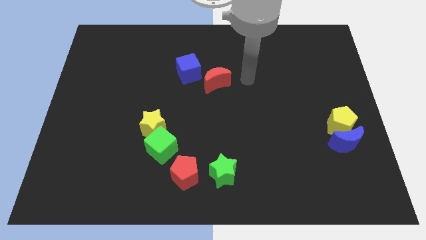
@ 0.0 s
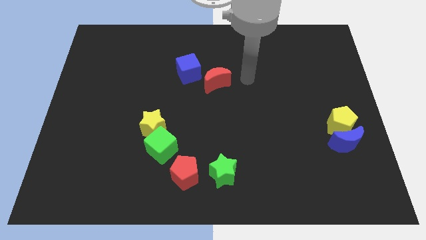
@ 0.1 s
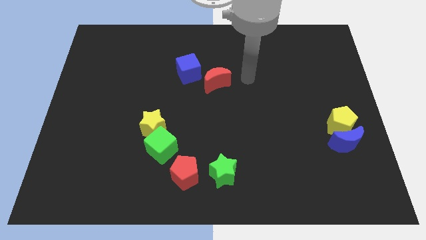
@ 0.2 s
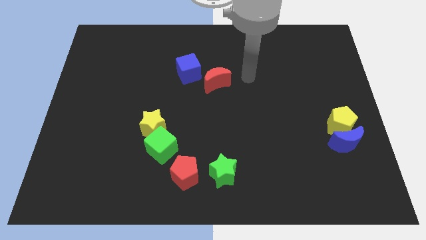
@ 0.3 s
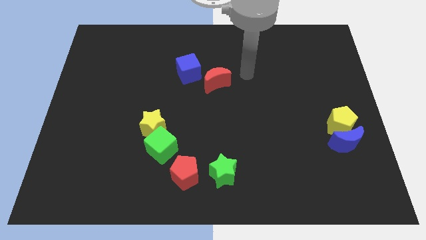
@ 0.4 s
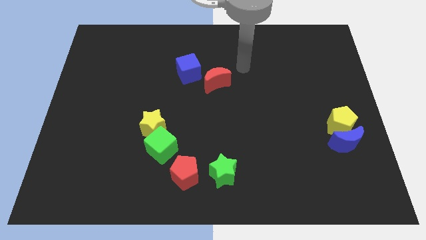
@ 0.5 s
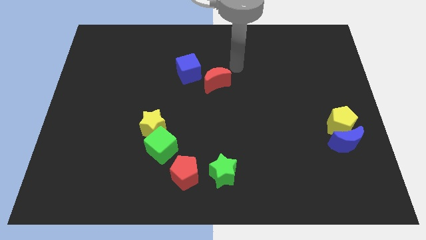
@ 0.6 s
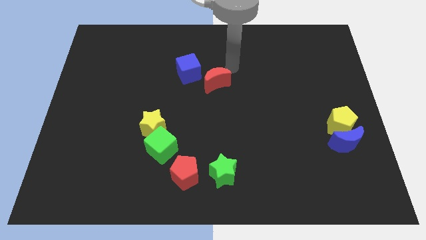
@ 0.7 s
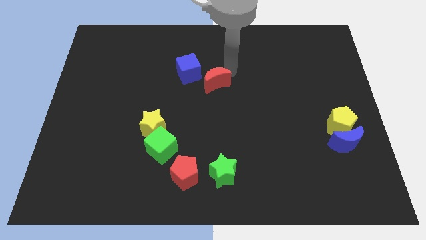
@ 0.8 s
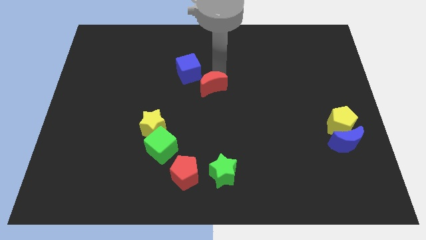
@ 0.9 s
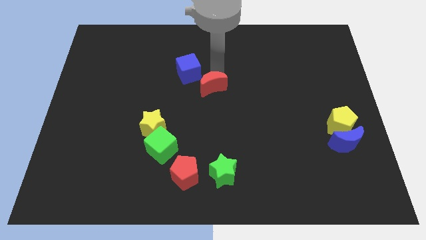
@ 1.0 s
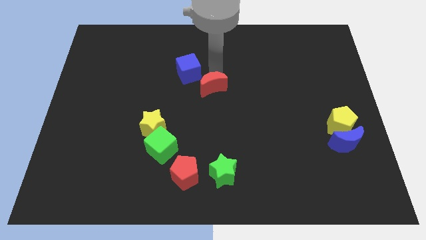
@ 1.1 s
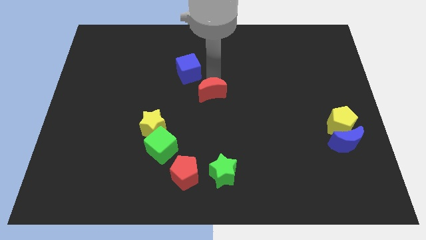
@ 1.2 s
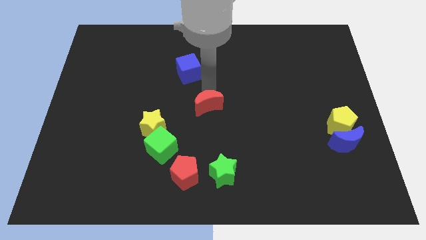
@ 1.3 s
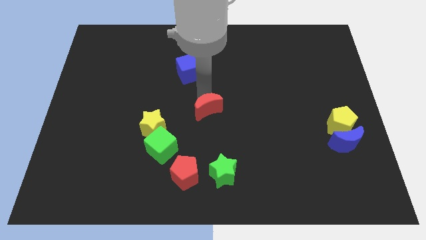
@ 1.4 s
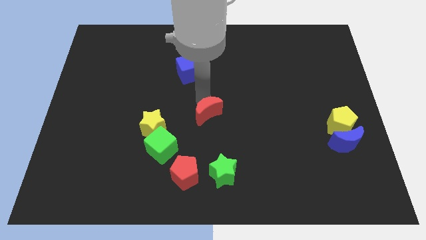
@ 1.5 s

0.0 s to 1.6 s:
push the red crescent in the center

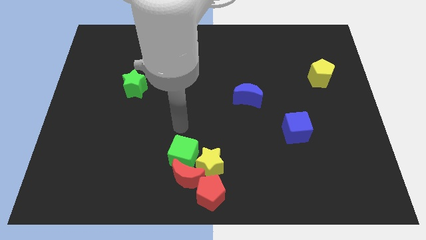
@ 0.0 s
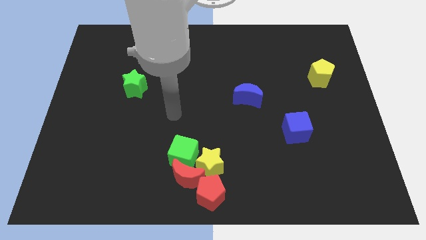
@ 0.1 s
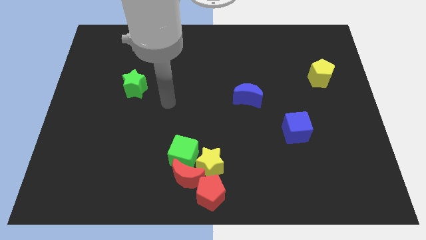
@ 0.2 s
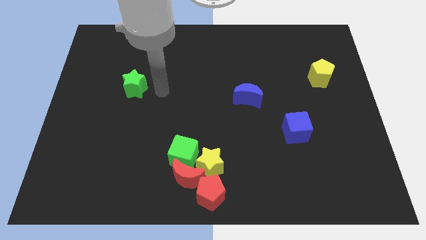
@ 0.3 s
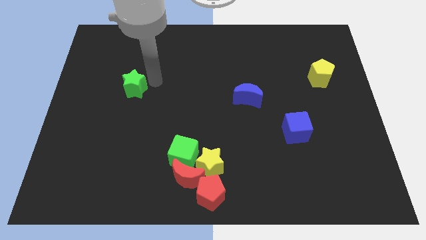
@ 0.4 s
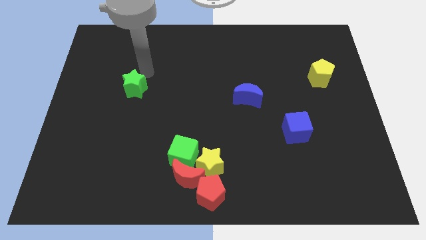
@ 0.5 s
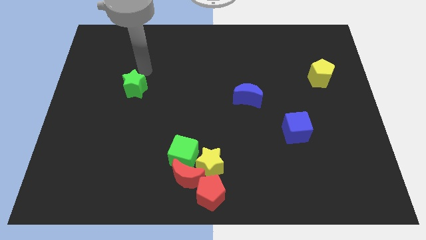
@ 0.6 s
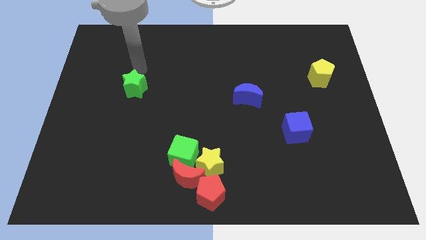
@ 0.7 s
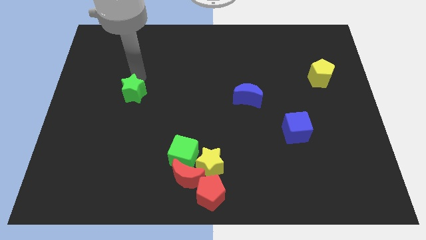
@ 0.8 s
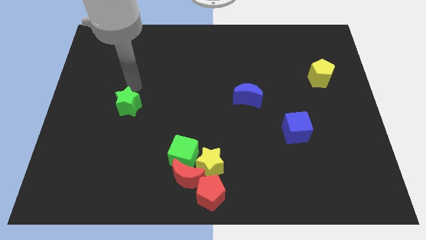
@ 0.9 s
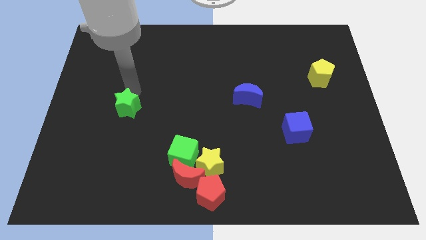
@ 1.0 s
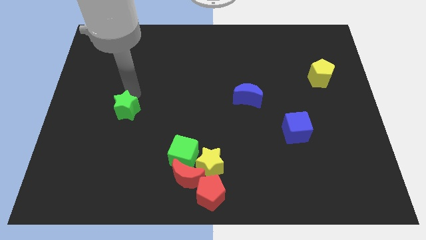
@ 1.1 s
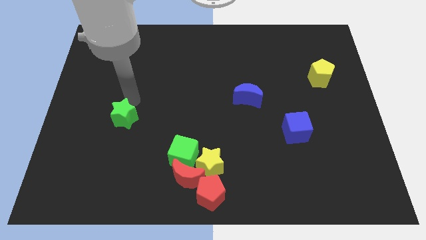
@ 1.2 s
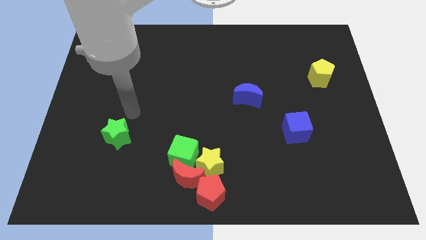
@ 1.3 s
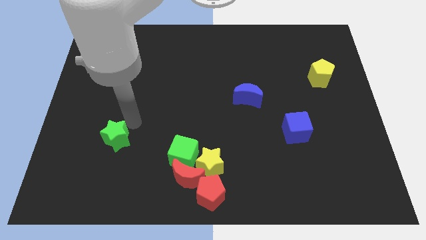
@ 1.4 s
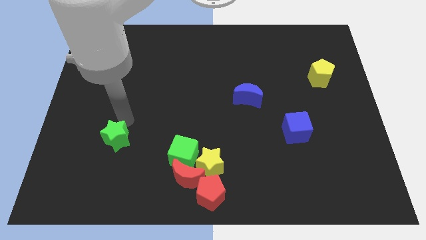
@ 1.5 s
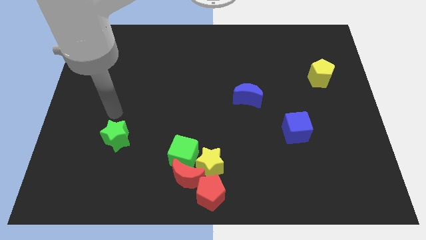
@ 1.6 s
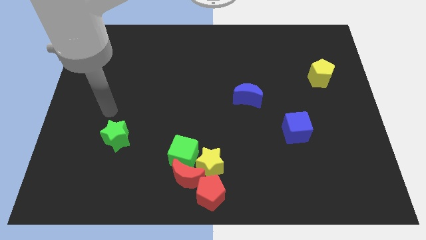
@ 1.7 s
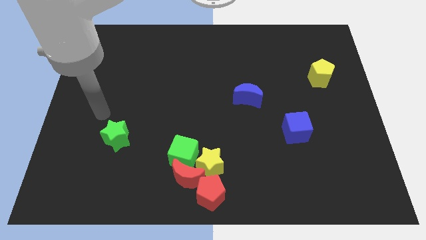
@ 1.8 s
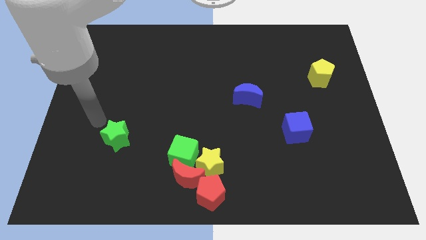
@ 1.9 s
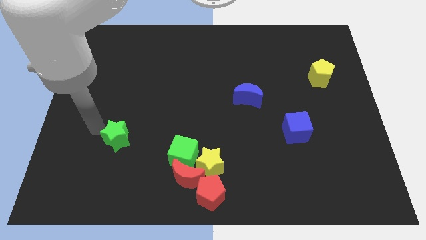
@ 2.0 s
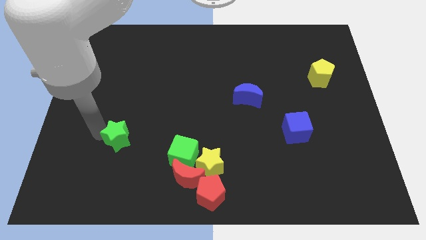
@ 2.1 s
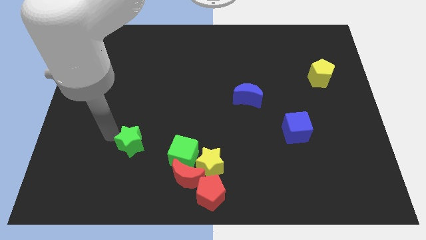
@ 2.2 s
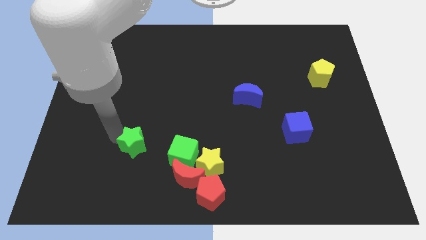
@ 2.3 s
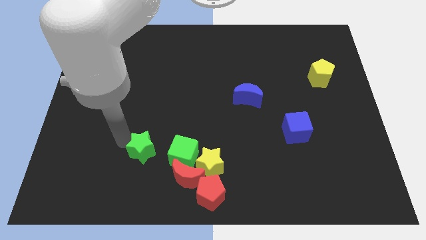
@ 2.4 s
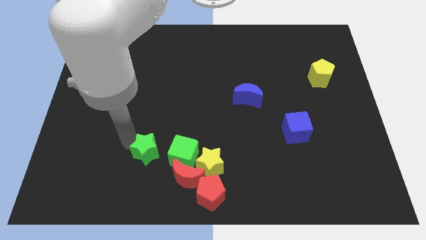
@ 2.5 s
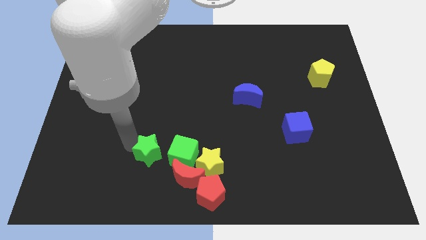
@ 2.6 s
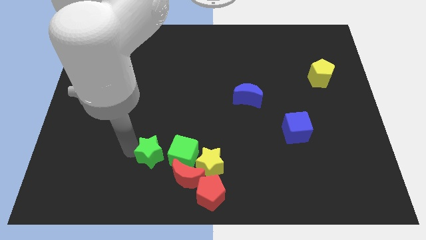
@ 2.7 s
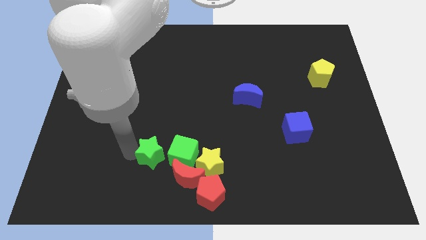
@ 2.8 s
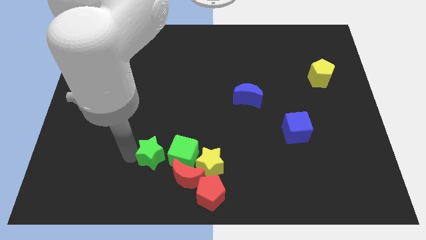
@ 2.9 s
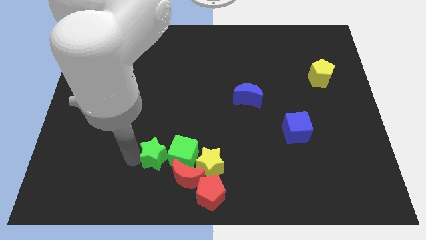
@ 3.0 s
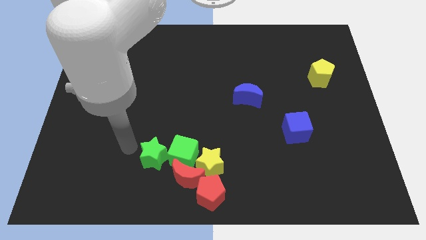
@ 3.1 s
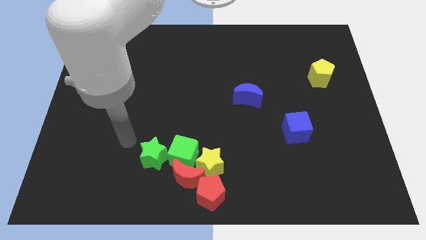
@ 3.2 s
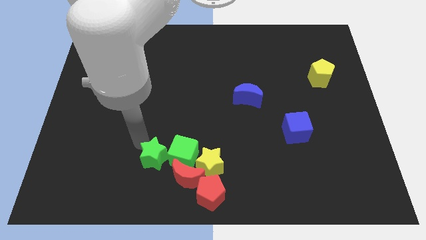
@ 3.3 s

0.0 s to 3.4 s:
push the green star into the green cube

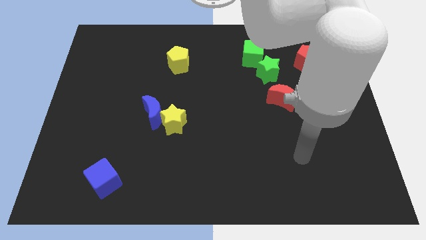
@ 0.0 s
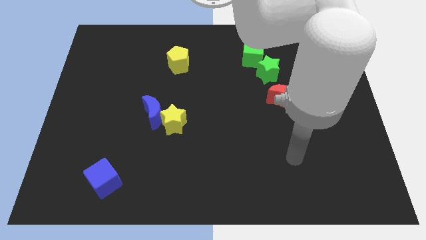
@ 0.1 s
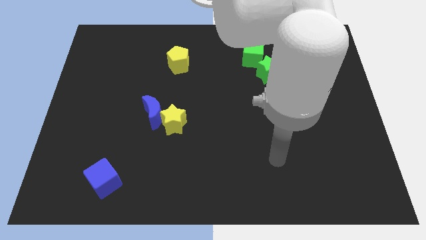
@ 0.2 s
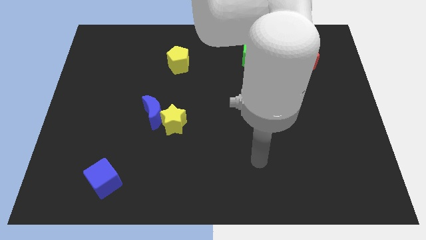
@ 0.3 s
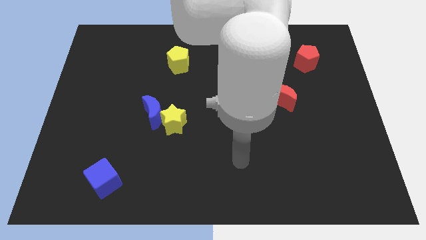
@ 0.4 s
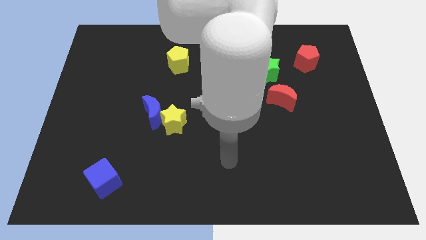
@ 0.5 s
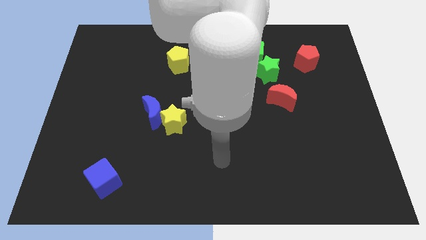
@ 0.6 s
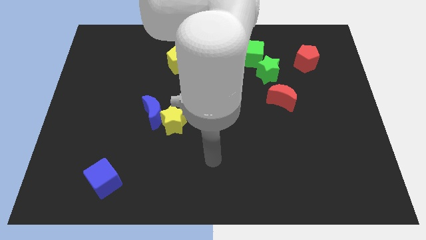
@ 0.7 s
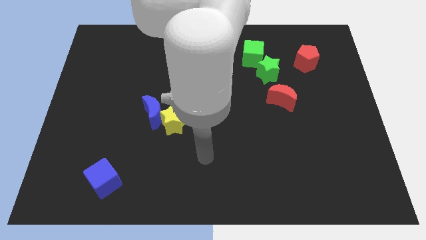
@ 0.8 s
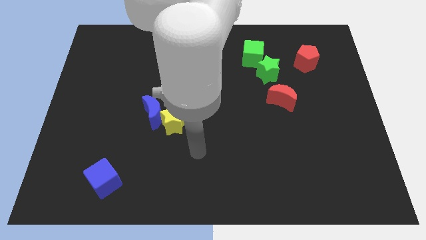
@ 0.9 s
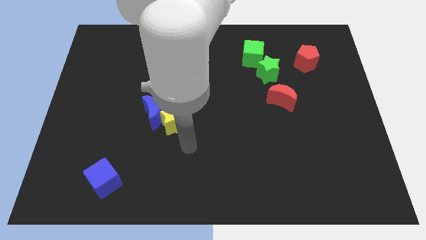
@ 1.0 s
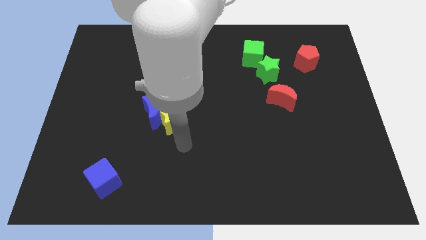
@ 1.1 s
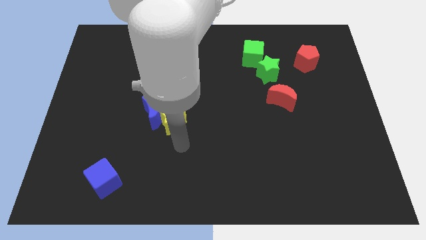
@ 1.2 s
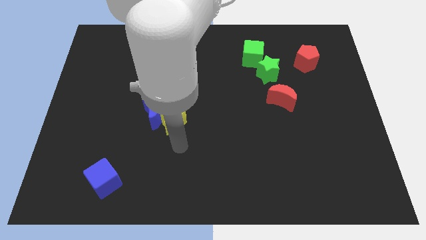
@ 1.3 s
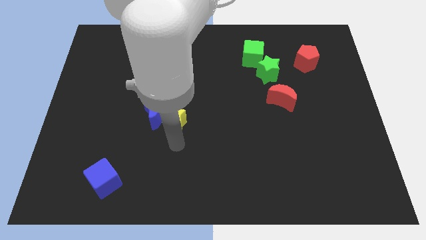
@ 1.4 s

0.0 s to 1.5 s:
move your arm towards the yellow star

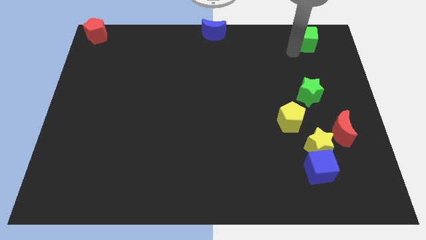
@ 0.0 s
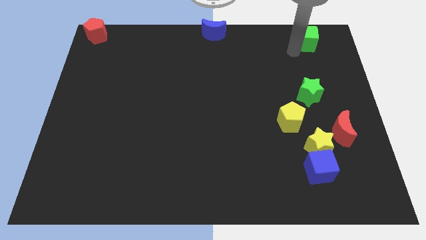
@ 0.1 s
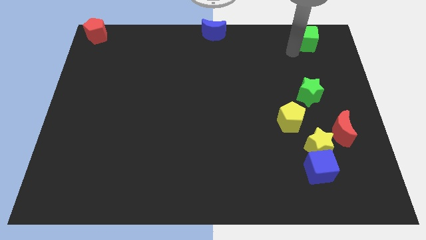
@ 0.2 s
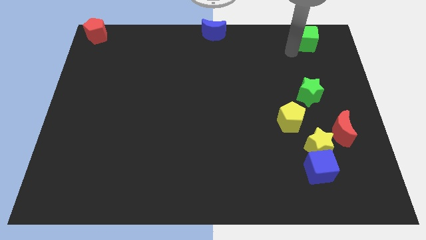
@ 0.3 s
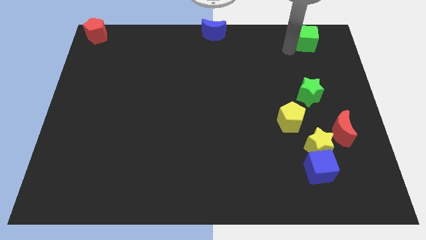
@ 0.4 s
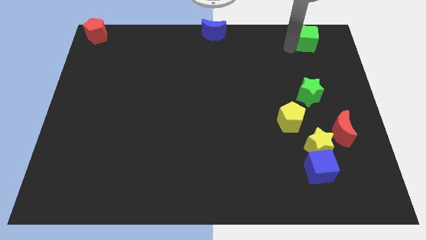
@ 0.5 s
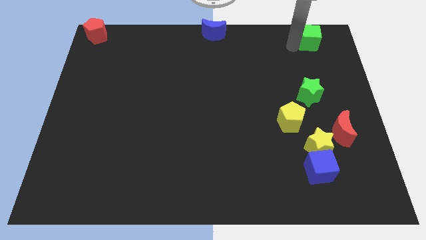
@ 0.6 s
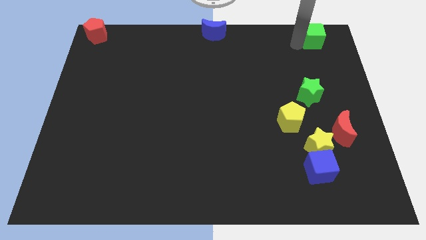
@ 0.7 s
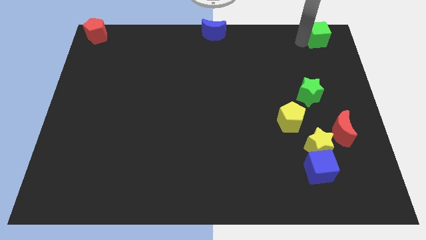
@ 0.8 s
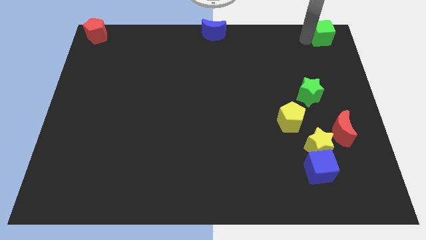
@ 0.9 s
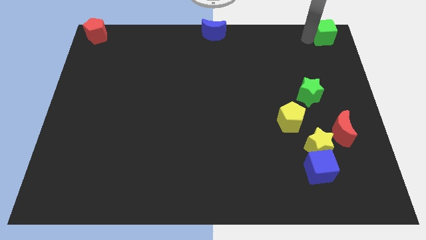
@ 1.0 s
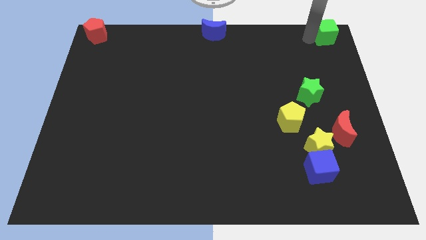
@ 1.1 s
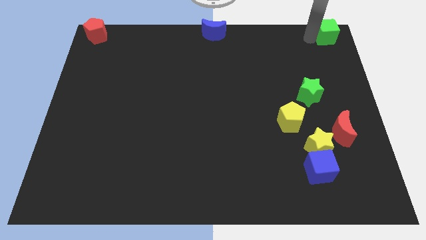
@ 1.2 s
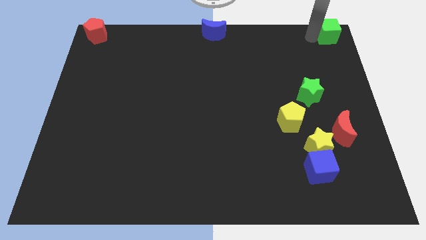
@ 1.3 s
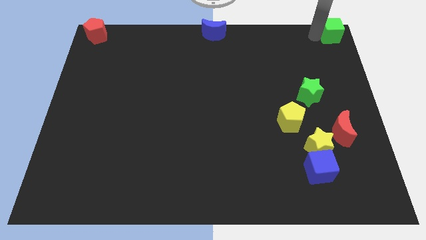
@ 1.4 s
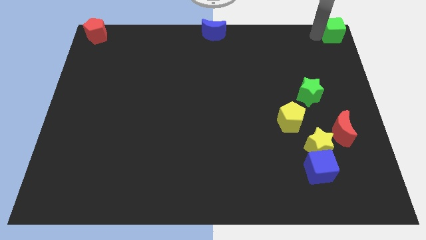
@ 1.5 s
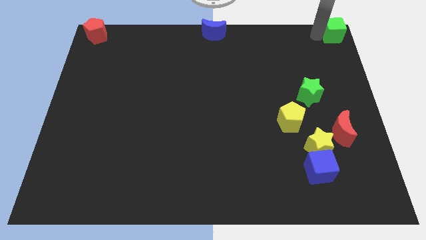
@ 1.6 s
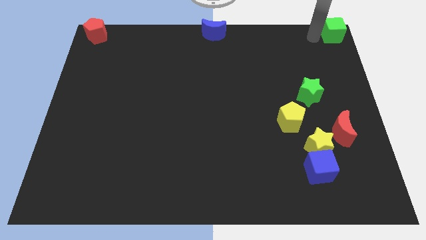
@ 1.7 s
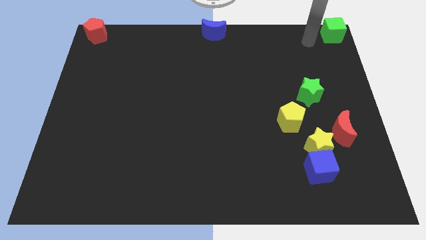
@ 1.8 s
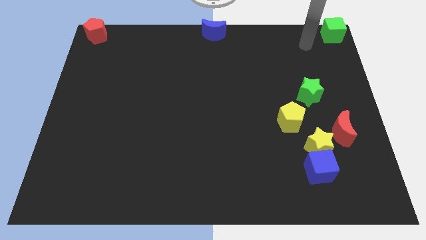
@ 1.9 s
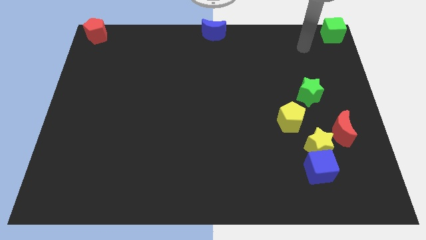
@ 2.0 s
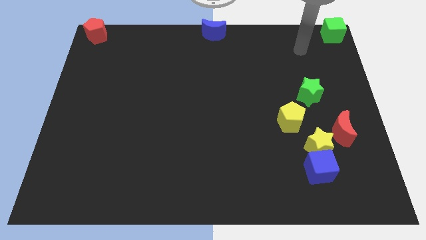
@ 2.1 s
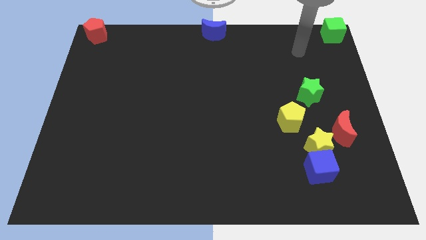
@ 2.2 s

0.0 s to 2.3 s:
push the green cube to the top right

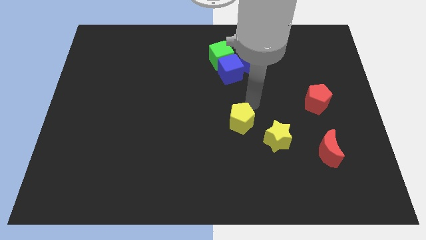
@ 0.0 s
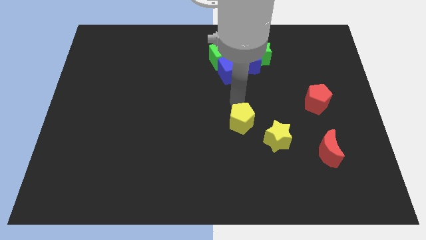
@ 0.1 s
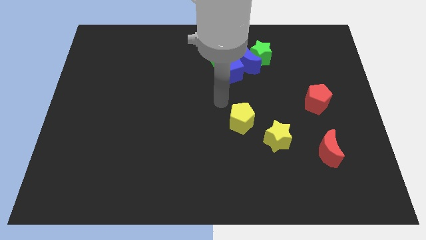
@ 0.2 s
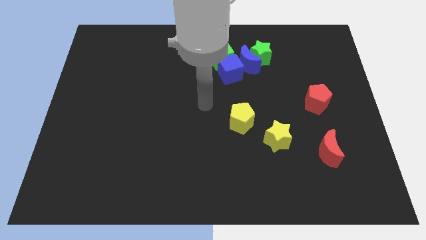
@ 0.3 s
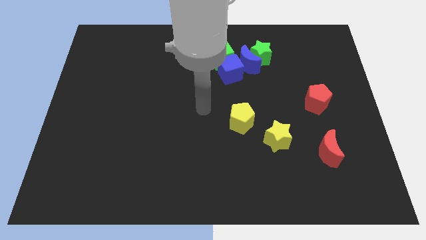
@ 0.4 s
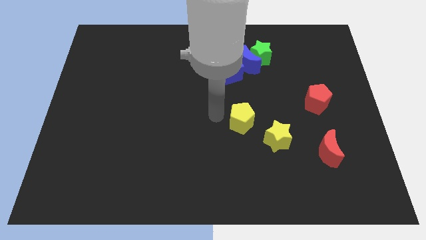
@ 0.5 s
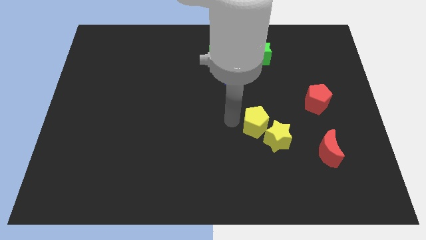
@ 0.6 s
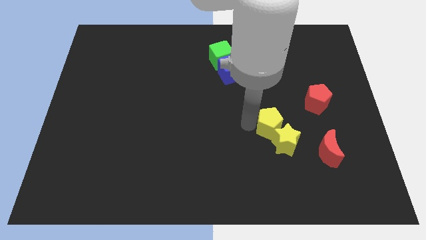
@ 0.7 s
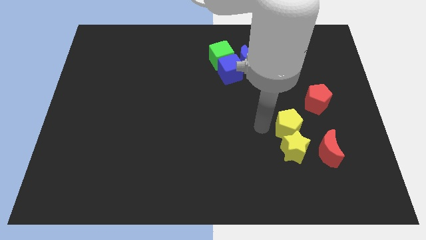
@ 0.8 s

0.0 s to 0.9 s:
push the yellow pentagon into yellow star
